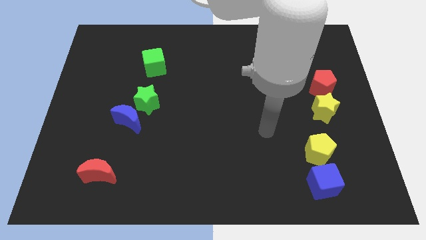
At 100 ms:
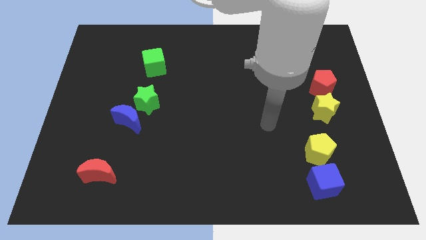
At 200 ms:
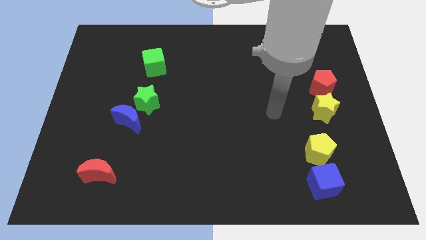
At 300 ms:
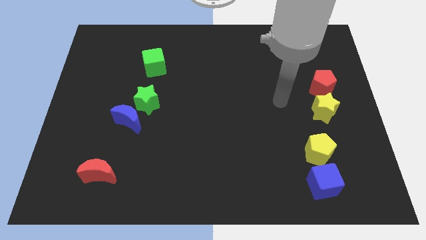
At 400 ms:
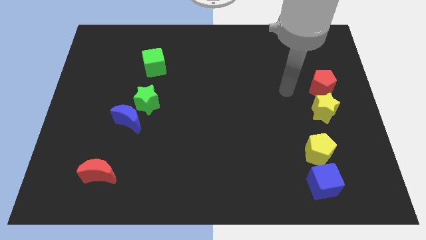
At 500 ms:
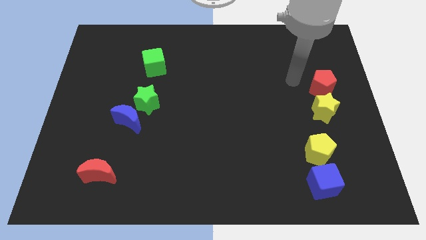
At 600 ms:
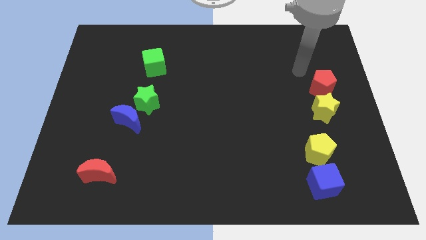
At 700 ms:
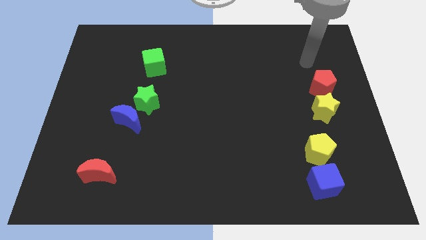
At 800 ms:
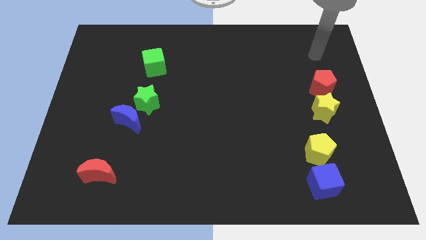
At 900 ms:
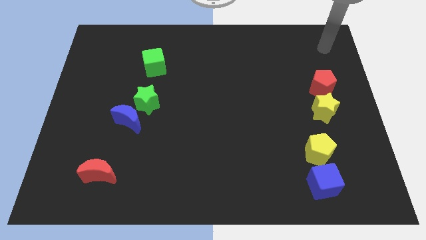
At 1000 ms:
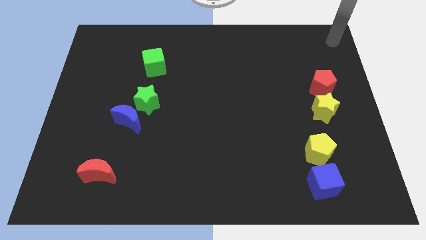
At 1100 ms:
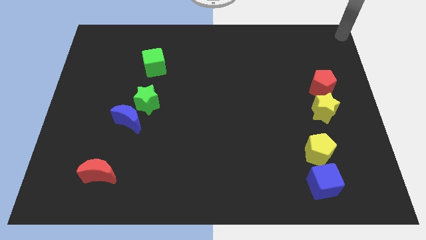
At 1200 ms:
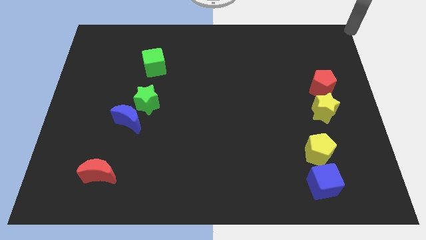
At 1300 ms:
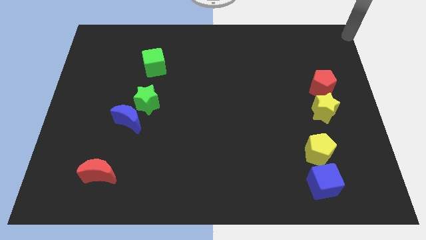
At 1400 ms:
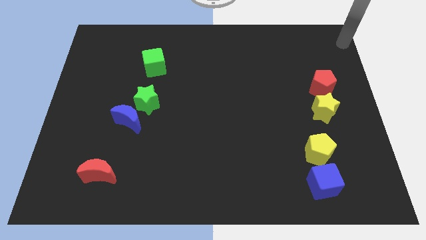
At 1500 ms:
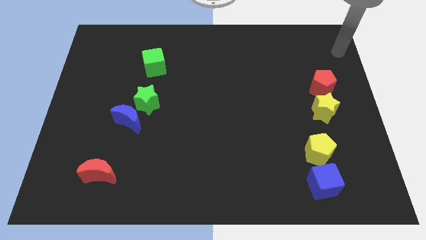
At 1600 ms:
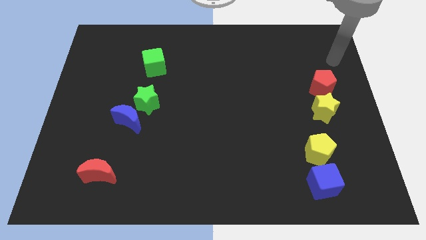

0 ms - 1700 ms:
move your arm towards the red pentagon

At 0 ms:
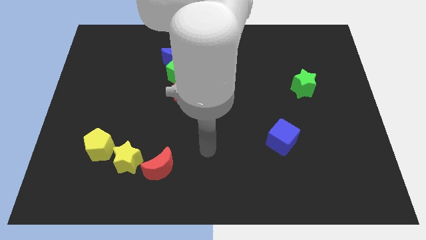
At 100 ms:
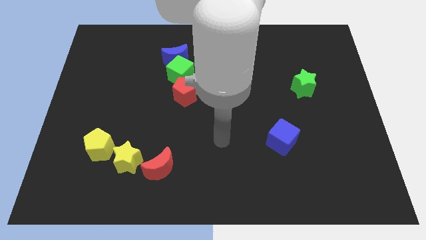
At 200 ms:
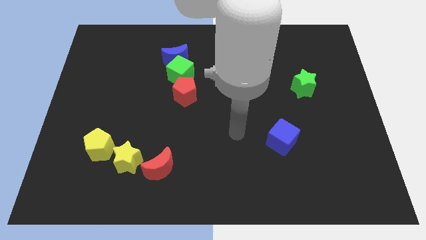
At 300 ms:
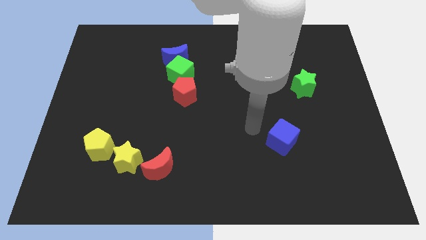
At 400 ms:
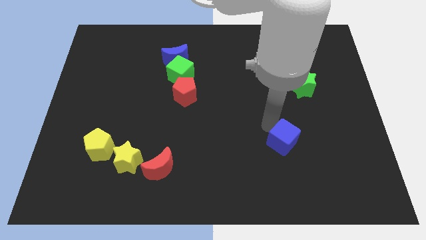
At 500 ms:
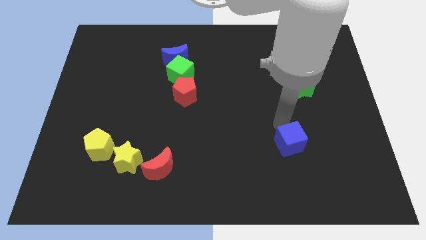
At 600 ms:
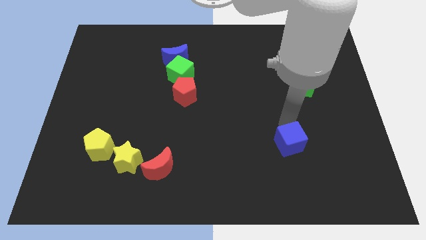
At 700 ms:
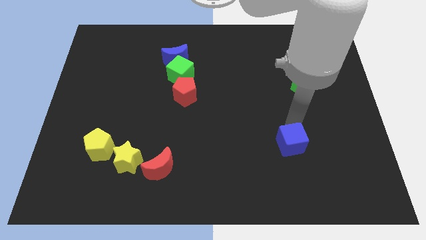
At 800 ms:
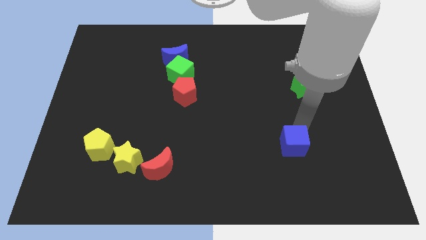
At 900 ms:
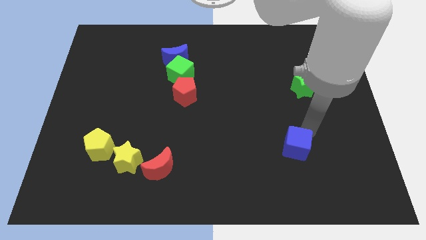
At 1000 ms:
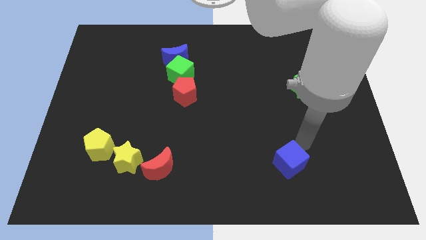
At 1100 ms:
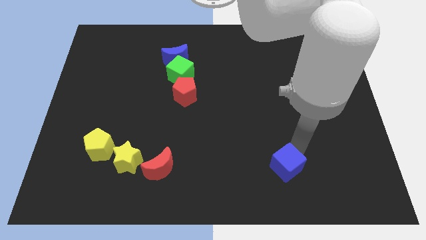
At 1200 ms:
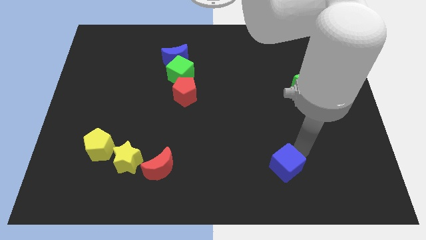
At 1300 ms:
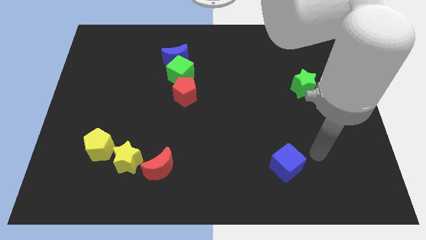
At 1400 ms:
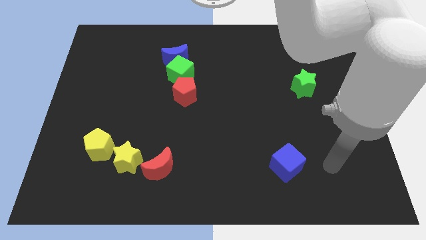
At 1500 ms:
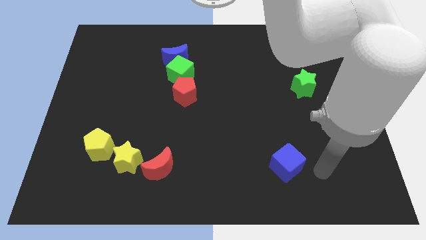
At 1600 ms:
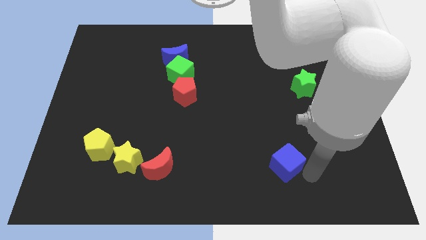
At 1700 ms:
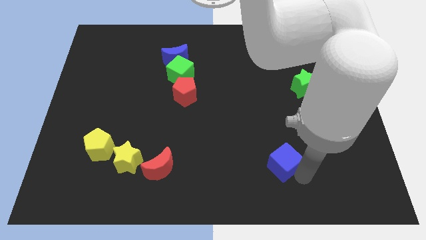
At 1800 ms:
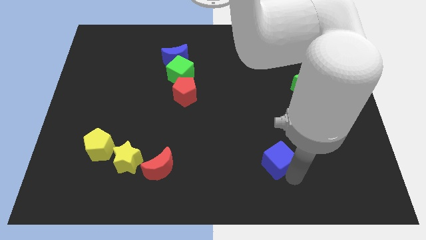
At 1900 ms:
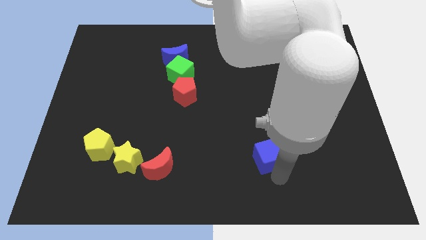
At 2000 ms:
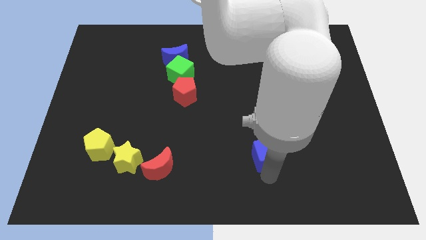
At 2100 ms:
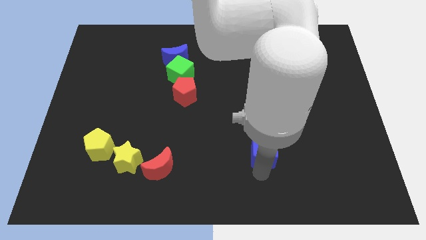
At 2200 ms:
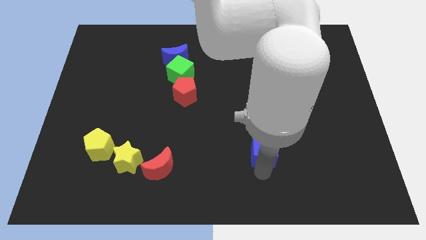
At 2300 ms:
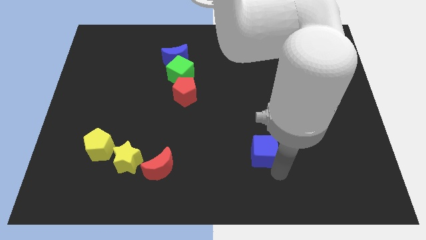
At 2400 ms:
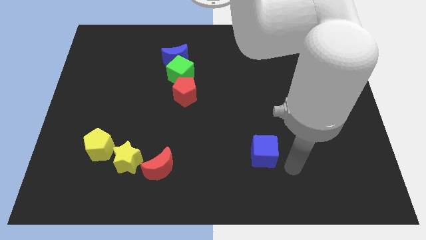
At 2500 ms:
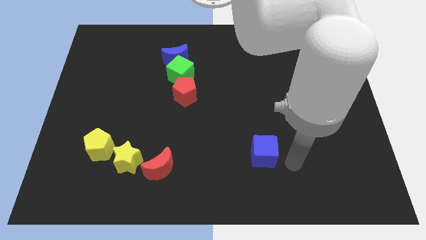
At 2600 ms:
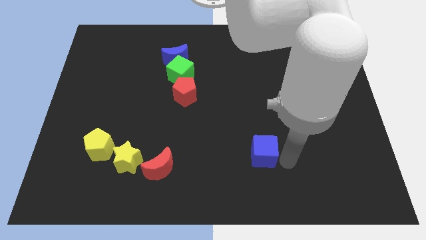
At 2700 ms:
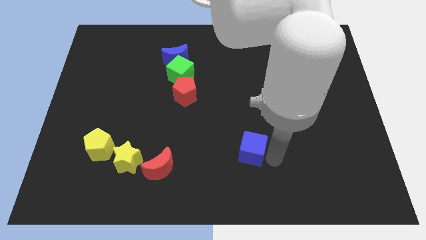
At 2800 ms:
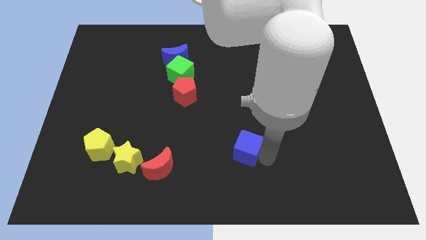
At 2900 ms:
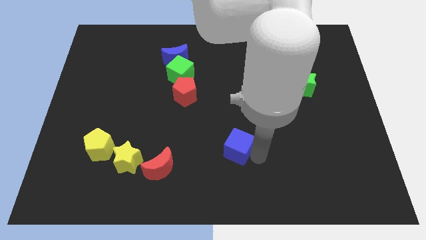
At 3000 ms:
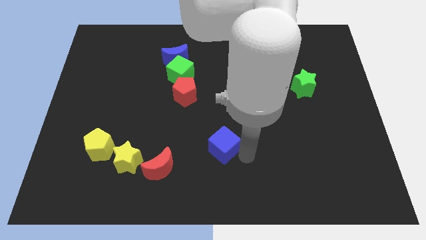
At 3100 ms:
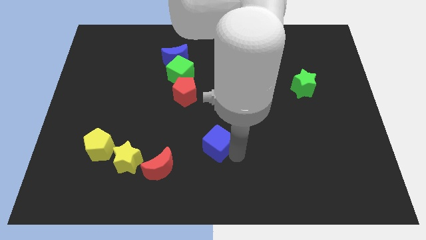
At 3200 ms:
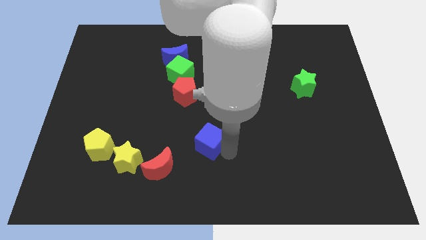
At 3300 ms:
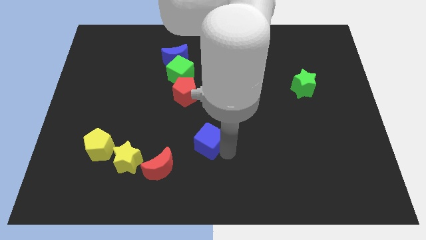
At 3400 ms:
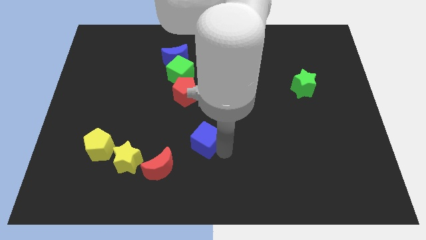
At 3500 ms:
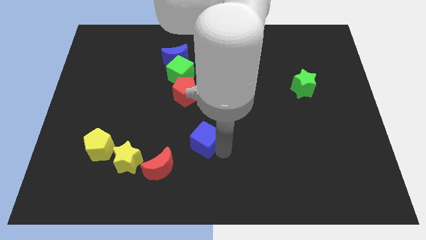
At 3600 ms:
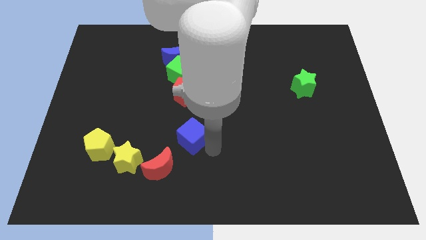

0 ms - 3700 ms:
place the blue cube under the red pentagon

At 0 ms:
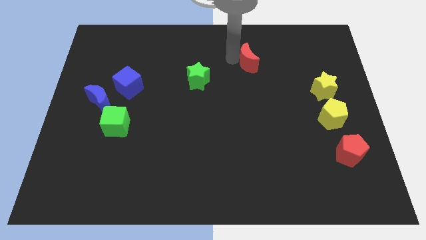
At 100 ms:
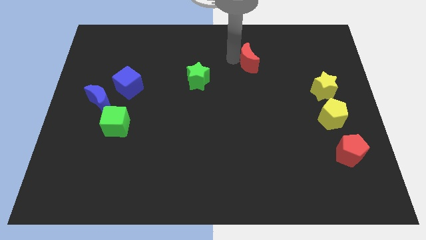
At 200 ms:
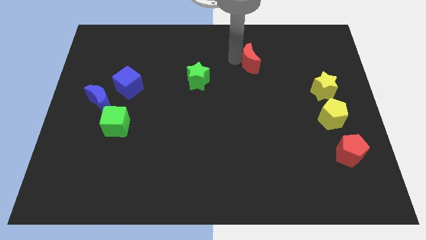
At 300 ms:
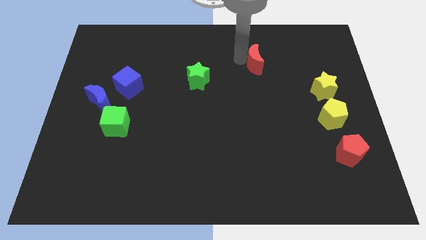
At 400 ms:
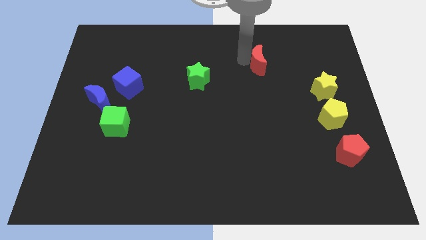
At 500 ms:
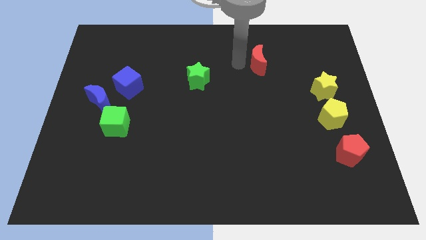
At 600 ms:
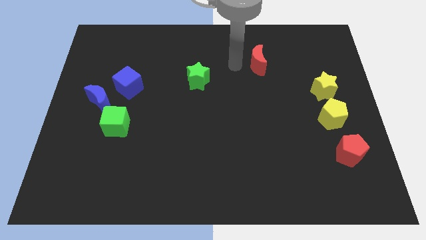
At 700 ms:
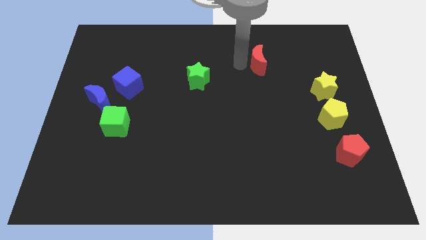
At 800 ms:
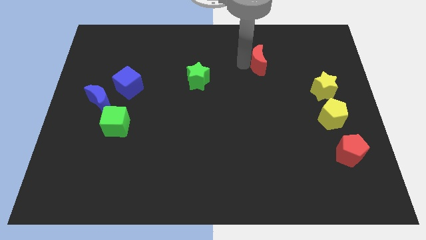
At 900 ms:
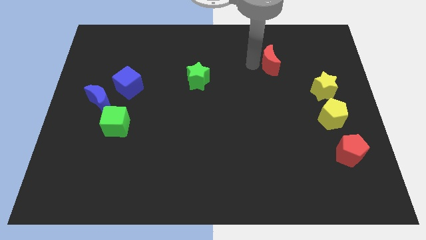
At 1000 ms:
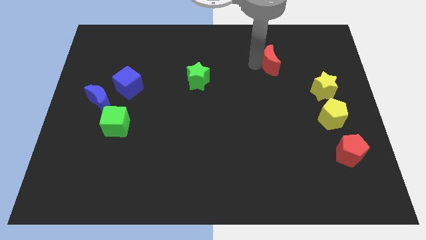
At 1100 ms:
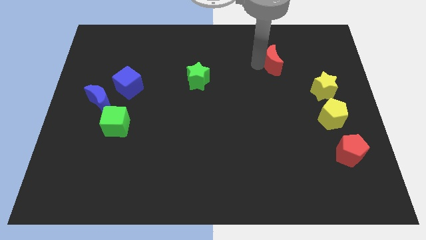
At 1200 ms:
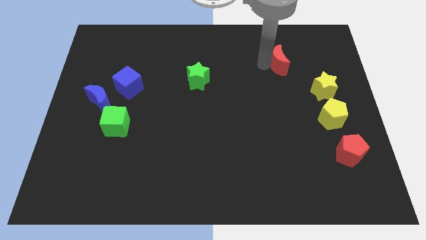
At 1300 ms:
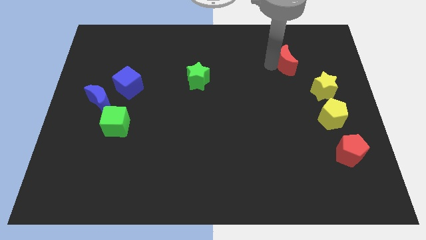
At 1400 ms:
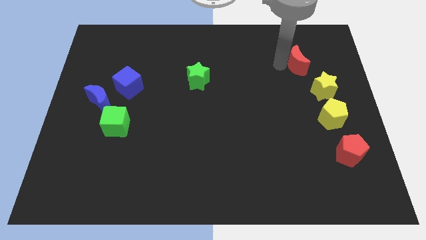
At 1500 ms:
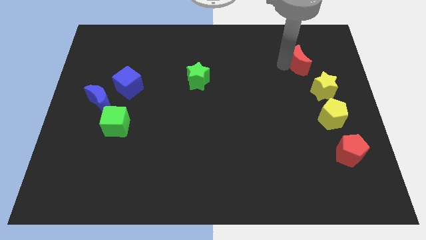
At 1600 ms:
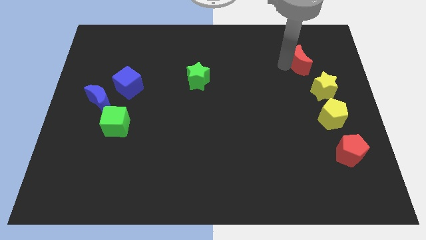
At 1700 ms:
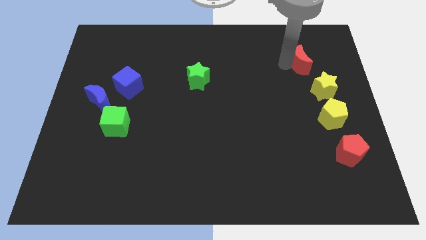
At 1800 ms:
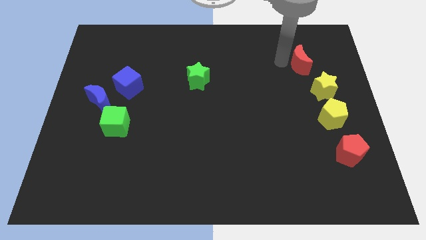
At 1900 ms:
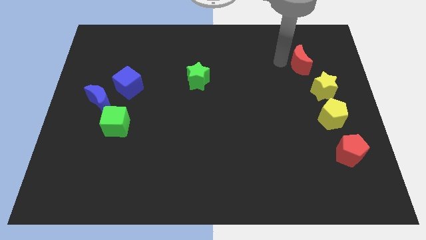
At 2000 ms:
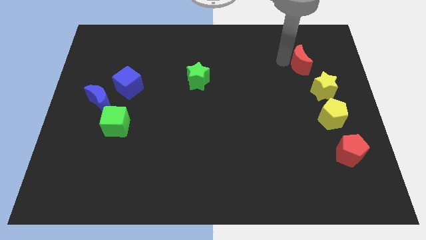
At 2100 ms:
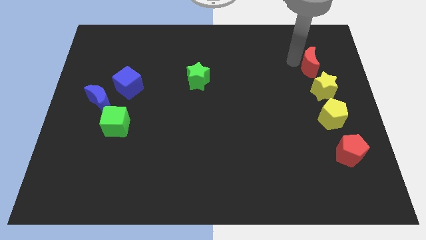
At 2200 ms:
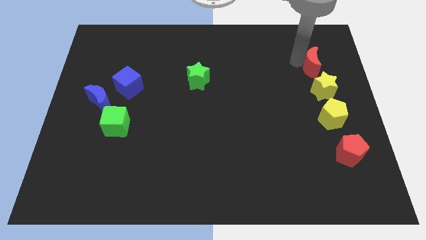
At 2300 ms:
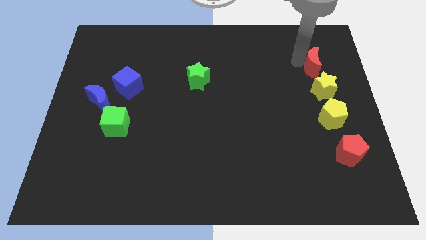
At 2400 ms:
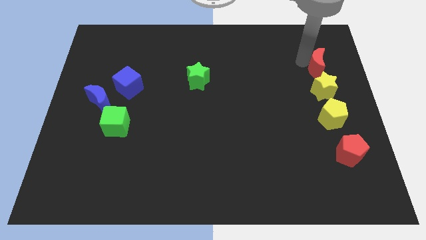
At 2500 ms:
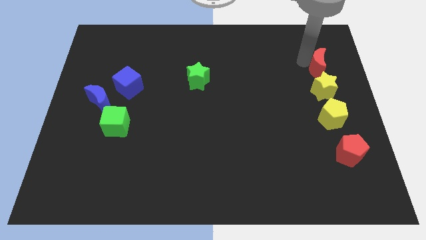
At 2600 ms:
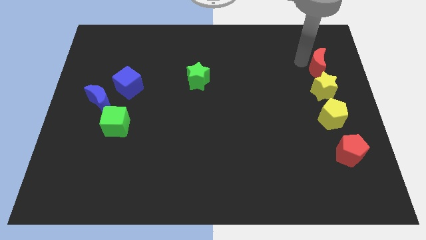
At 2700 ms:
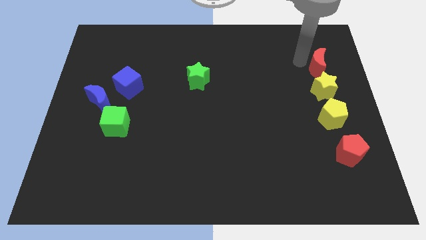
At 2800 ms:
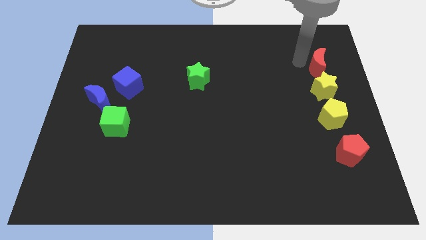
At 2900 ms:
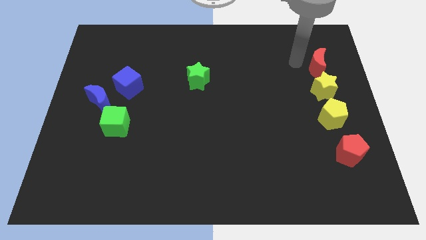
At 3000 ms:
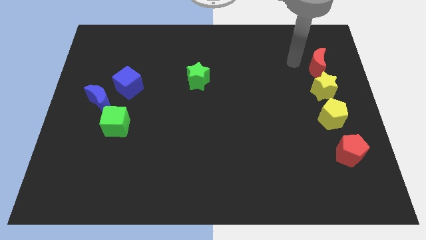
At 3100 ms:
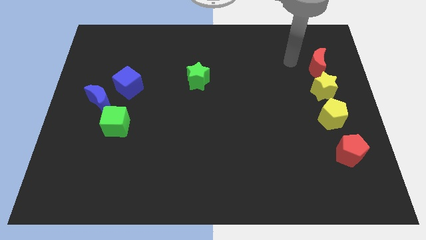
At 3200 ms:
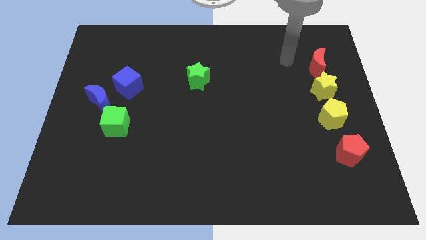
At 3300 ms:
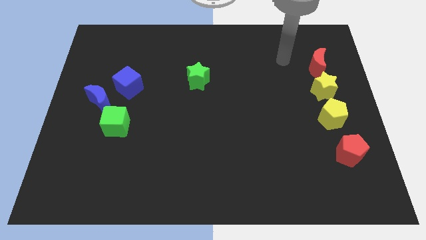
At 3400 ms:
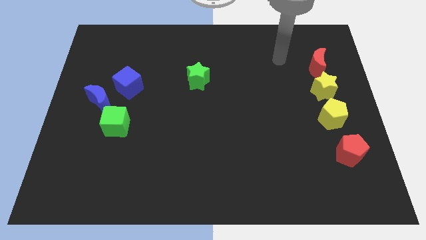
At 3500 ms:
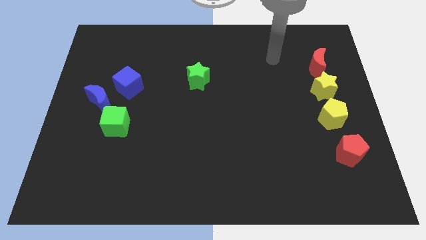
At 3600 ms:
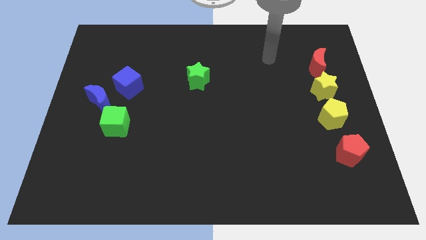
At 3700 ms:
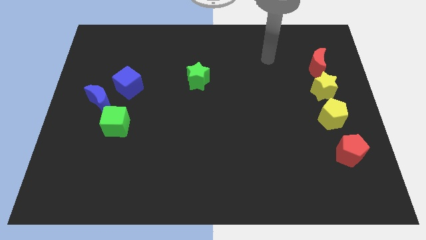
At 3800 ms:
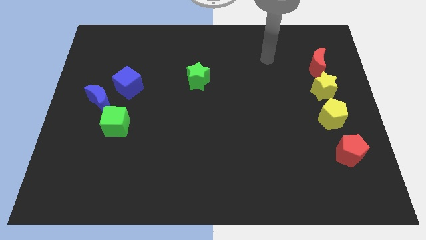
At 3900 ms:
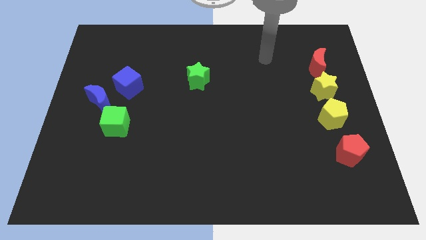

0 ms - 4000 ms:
move the red crescent above the yellow star
